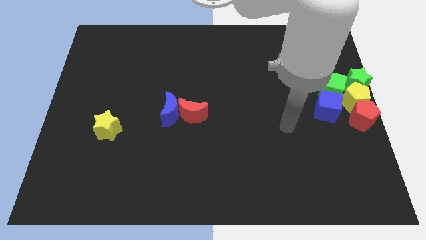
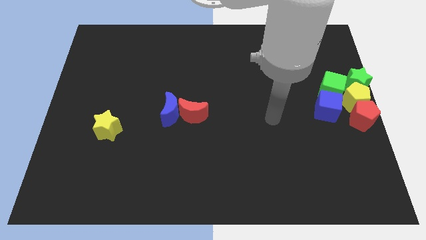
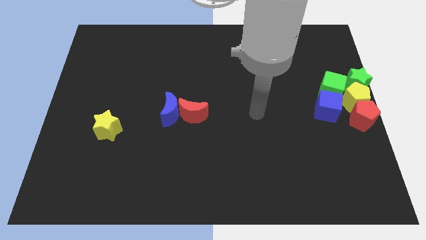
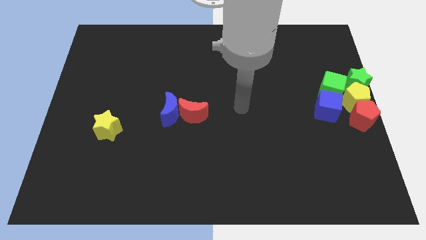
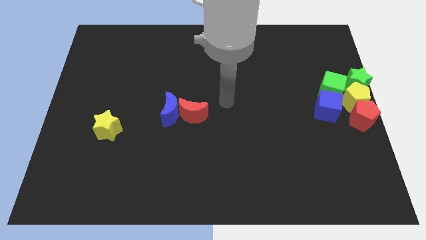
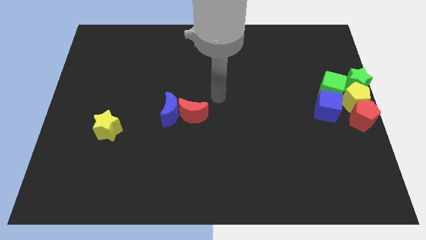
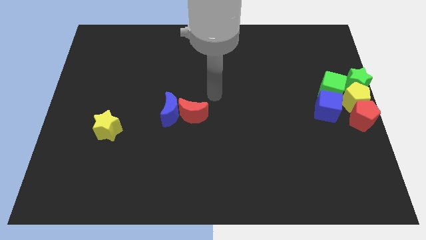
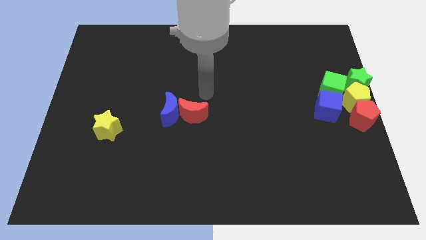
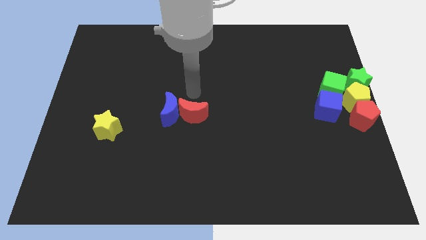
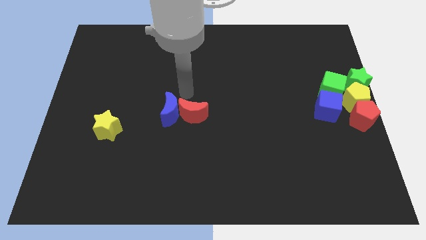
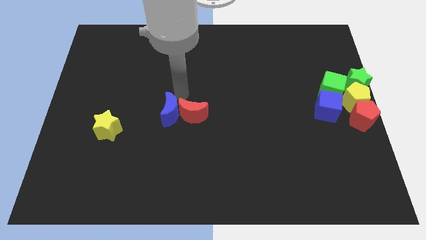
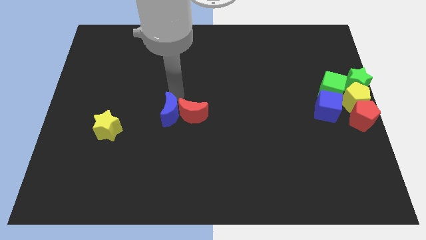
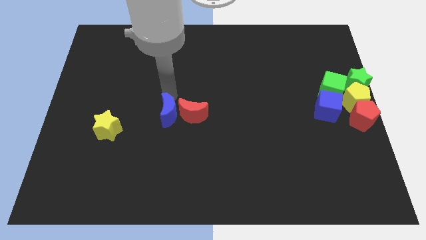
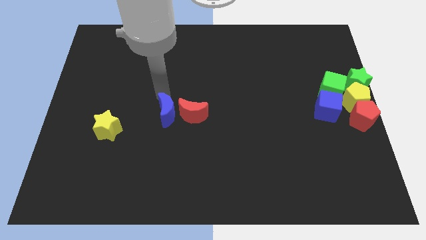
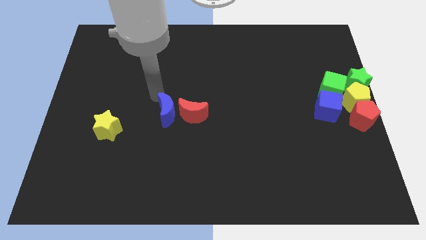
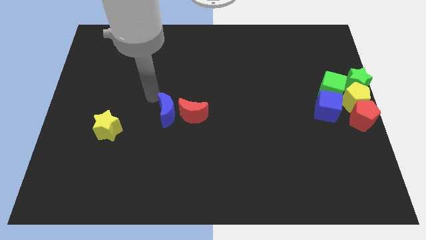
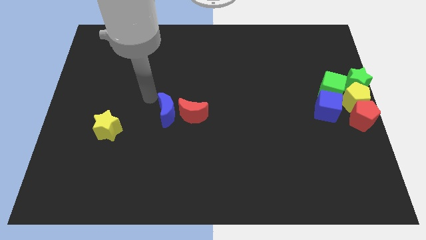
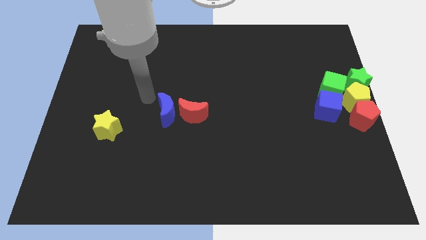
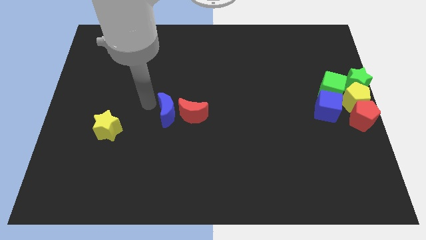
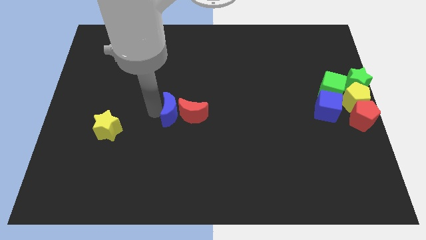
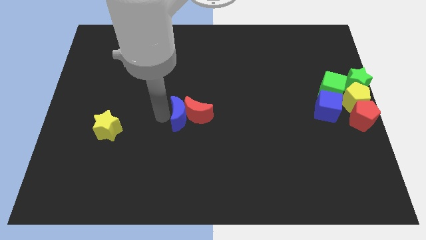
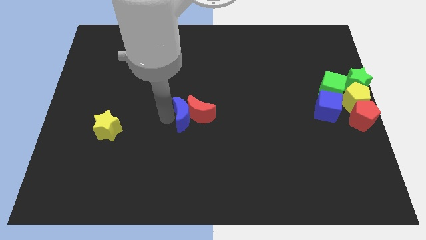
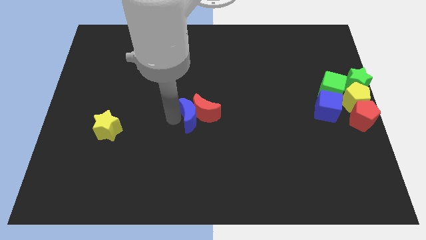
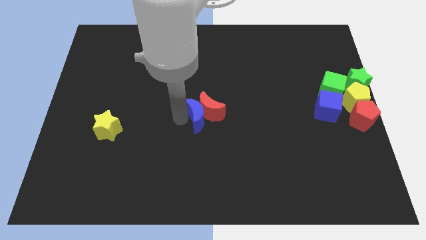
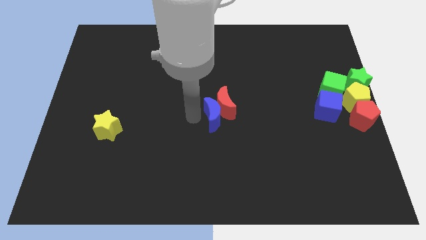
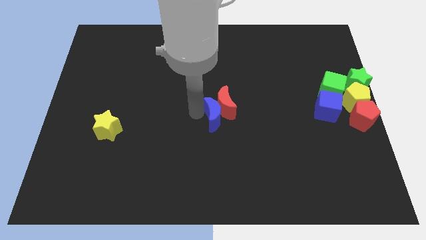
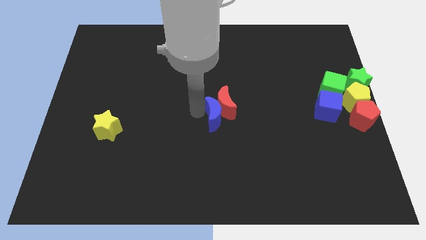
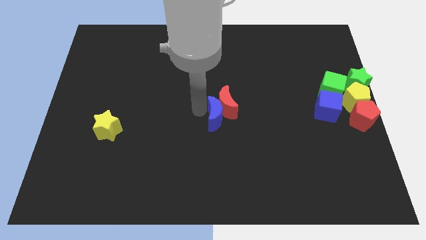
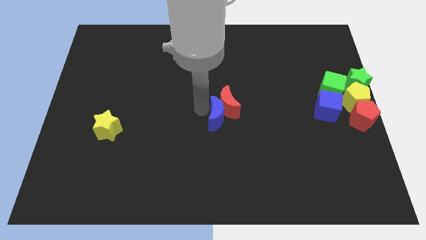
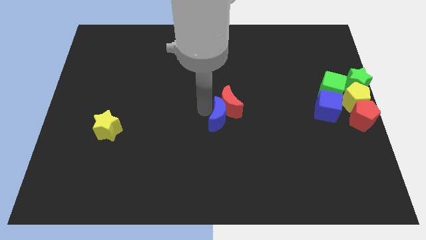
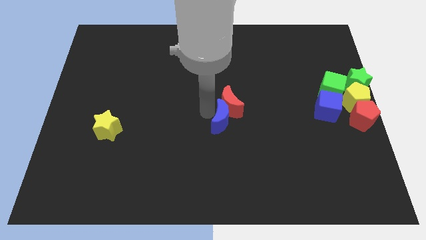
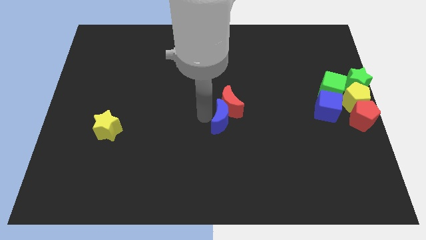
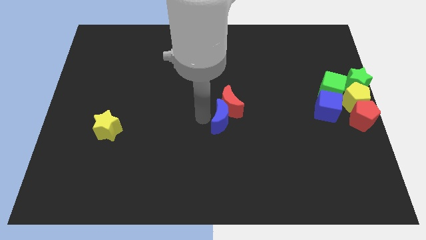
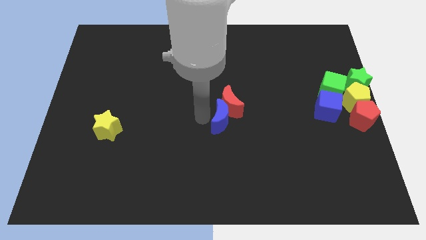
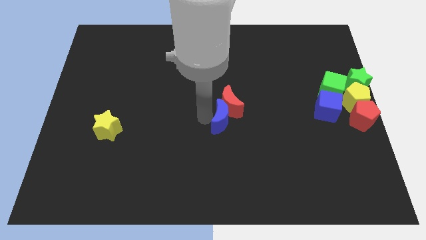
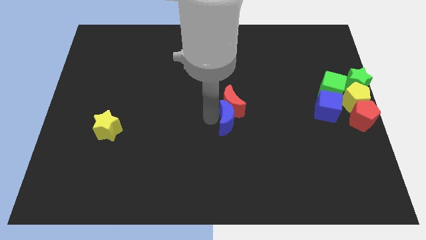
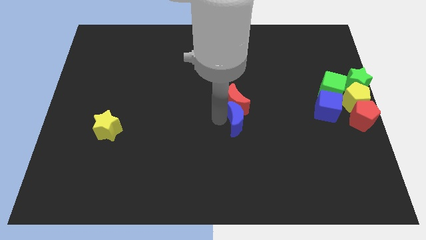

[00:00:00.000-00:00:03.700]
place the crescents at the center of the board

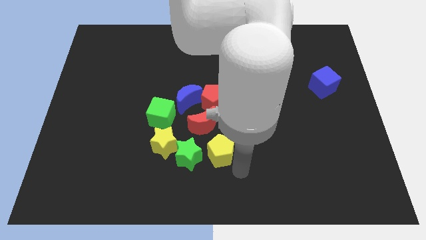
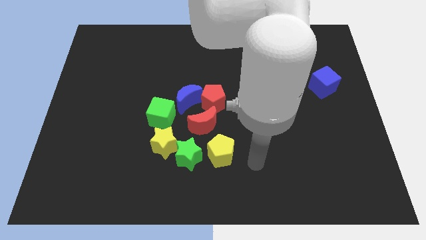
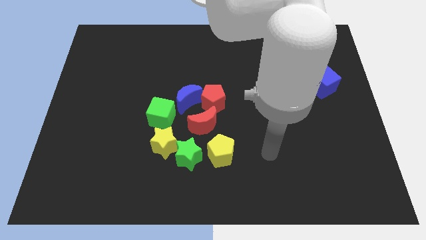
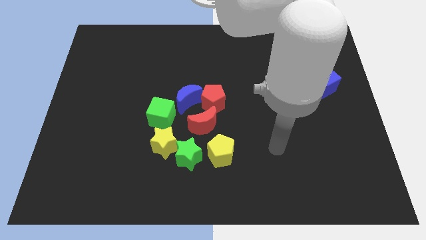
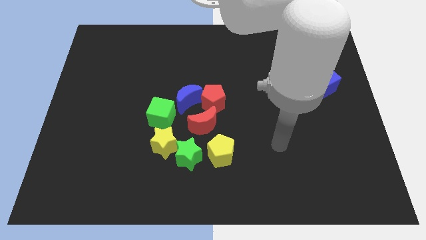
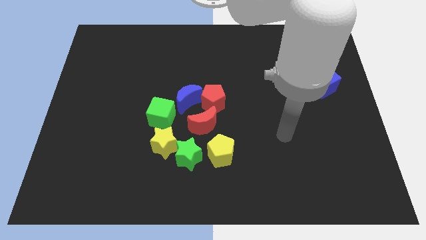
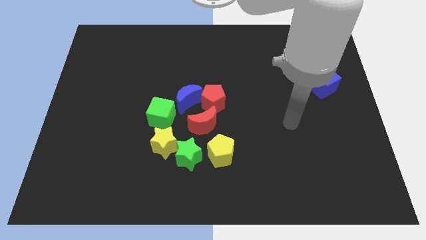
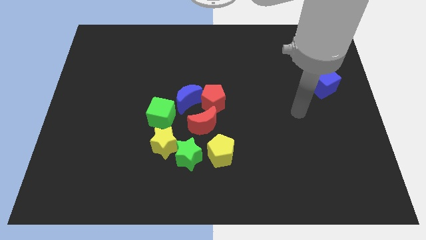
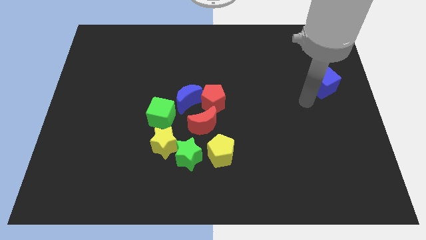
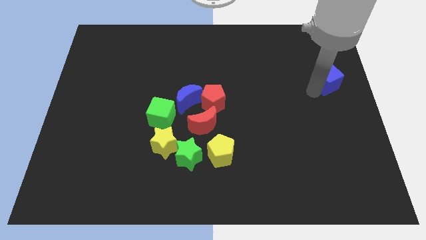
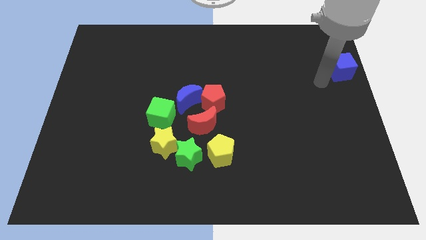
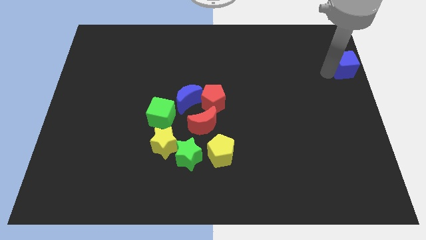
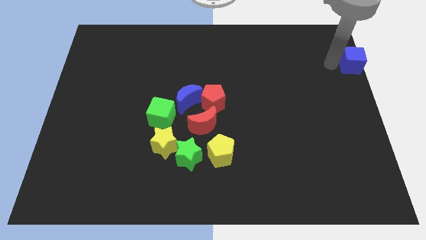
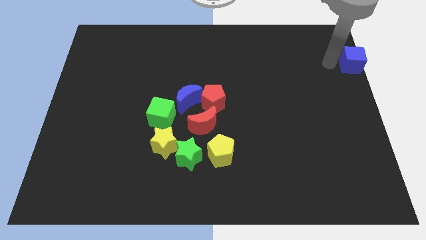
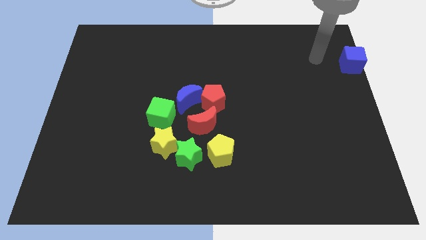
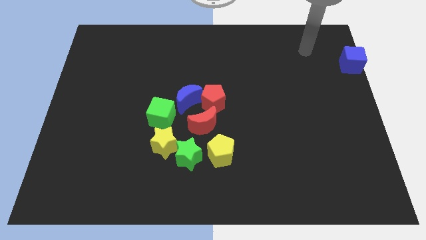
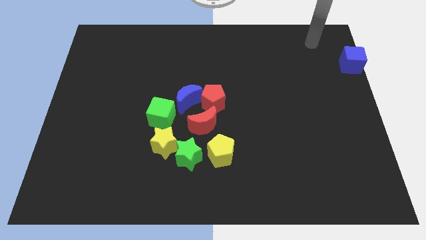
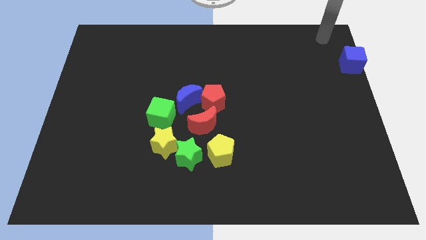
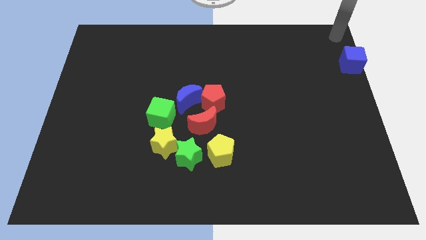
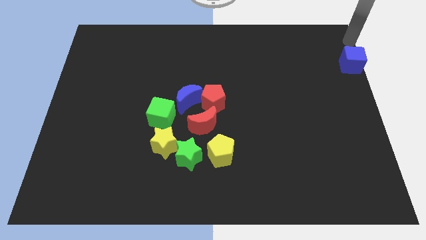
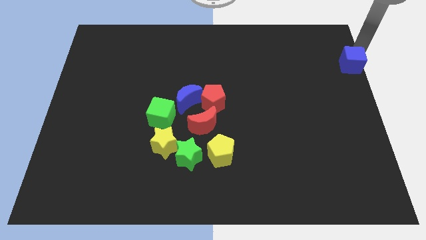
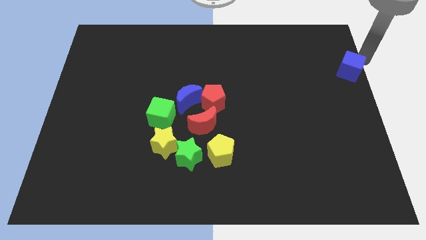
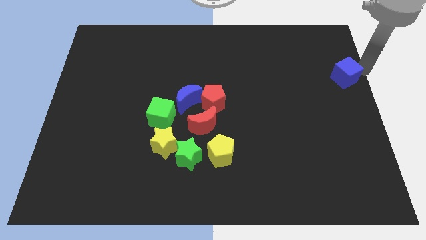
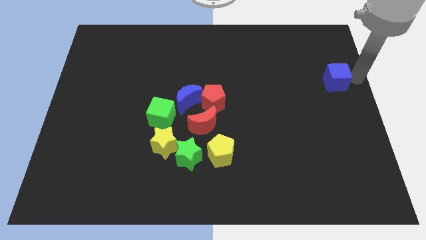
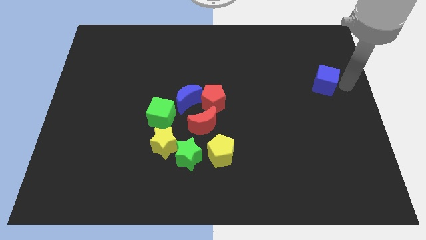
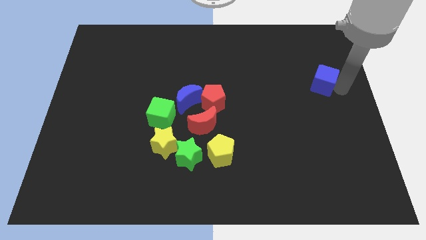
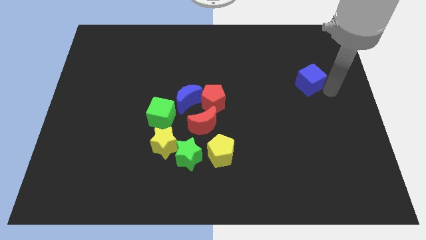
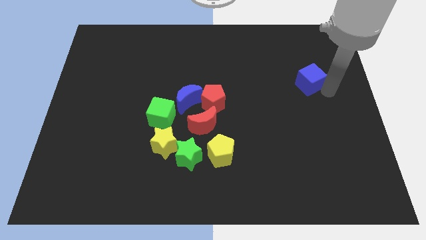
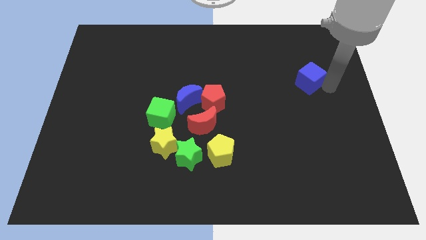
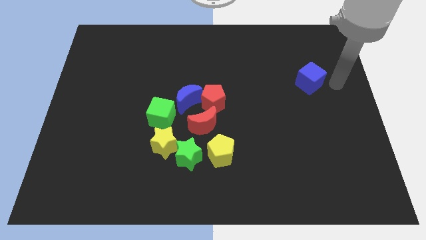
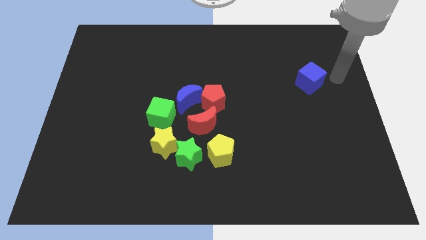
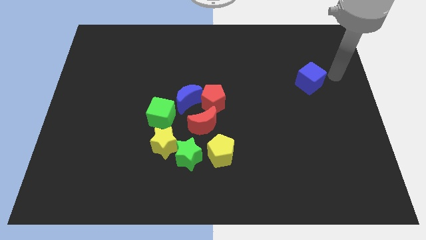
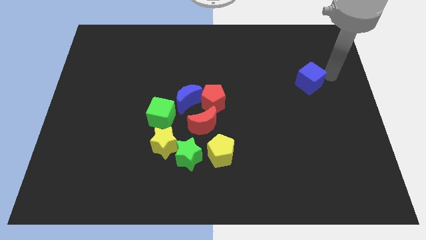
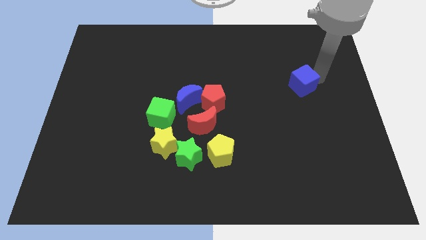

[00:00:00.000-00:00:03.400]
place blue cube diagonal to the yellow pentagon

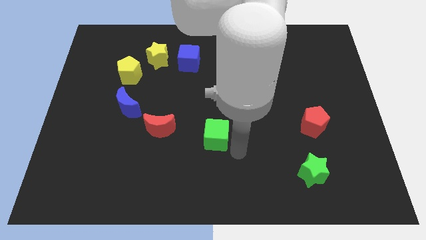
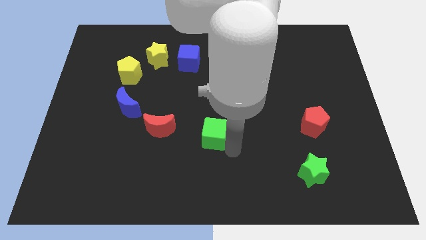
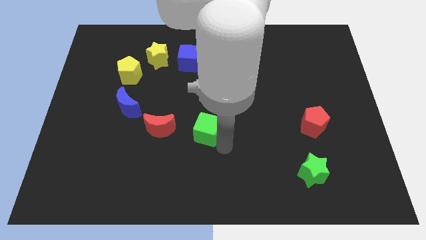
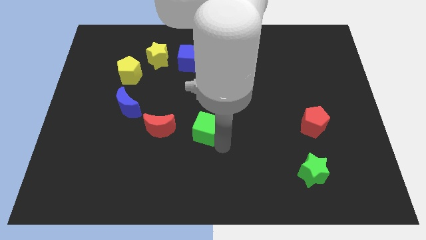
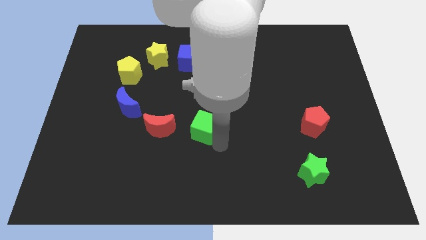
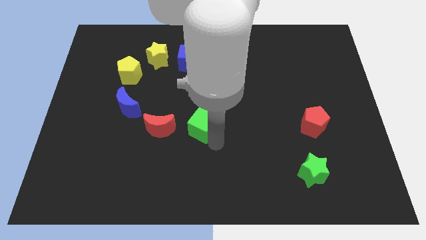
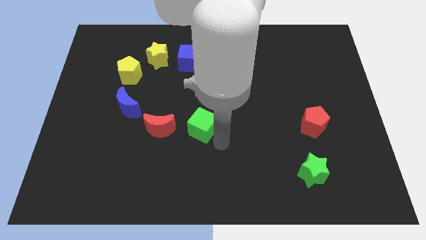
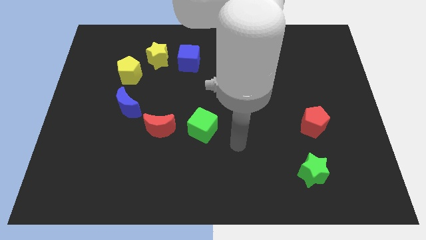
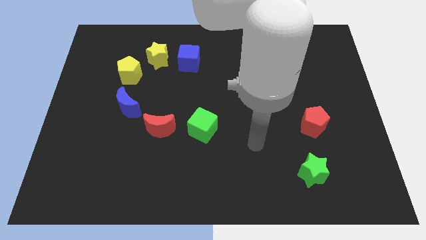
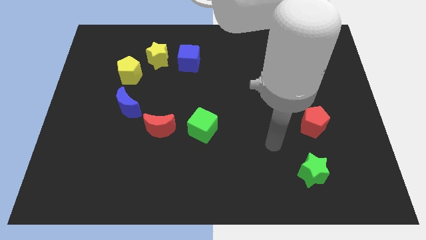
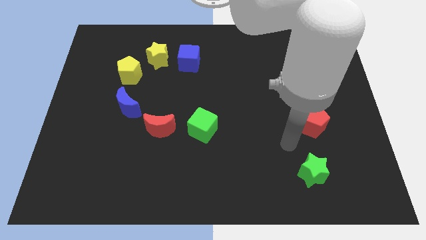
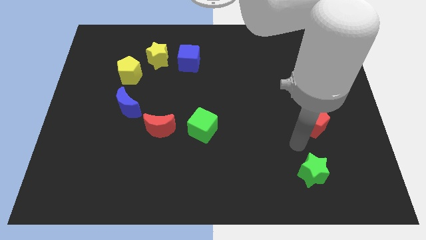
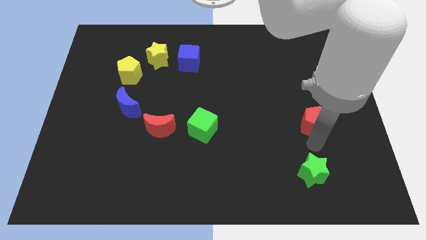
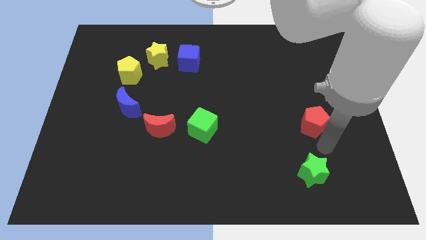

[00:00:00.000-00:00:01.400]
put the green cube close to the red crescent

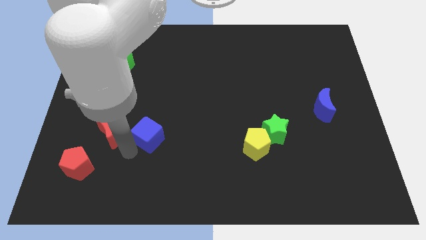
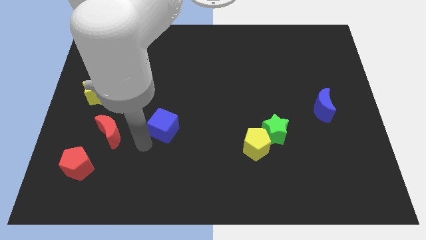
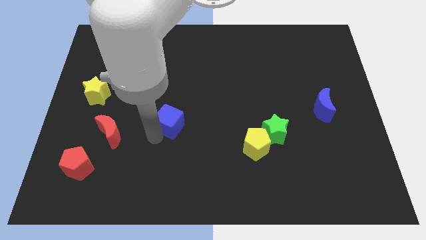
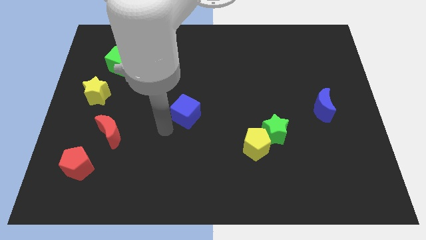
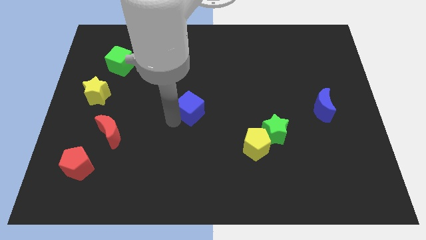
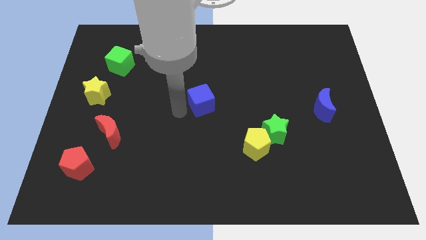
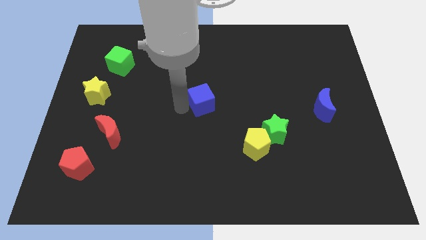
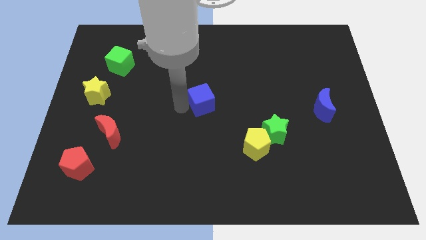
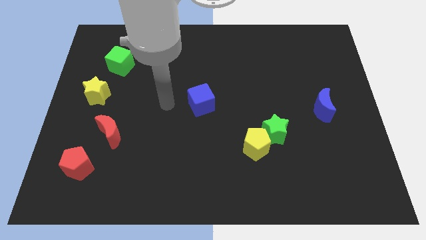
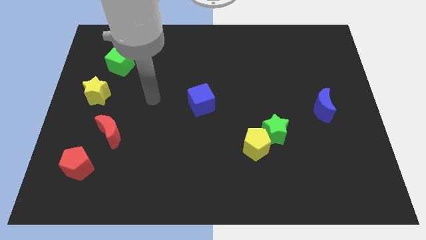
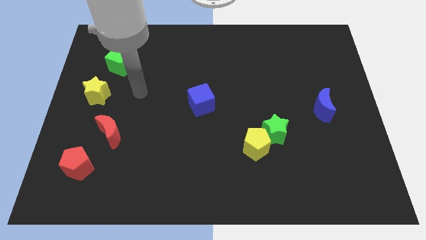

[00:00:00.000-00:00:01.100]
drag the blue cube to the center of the board
